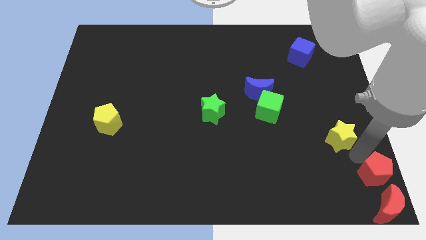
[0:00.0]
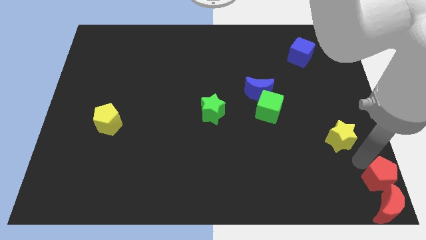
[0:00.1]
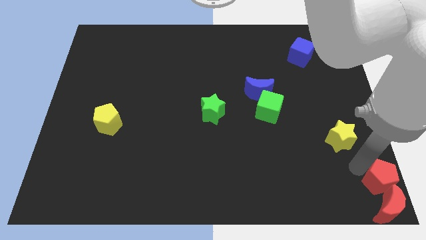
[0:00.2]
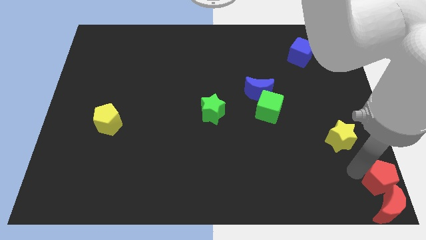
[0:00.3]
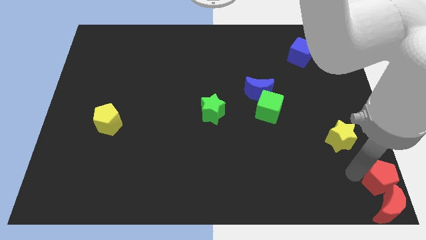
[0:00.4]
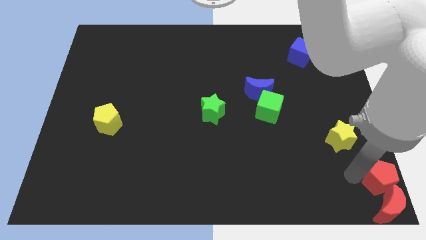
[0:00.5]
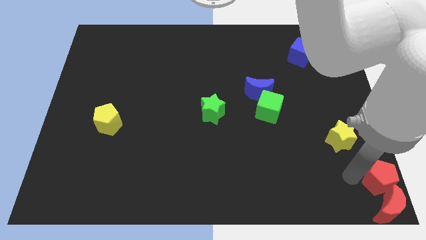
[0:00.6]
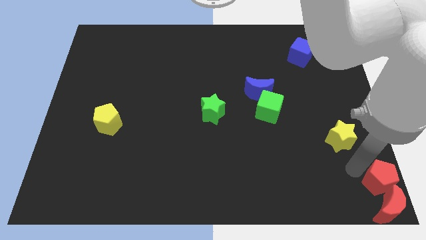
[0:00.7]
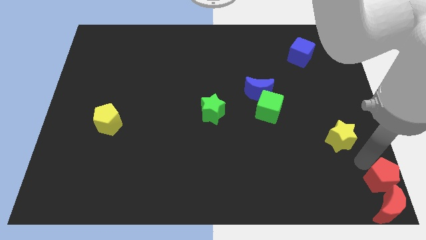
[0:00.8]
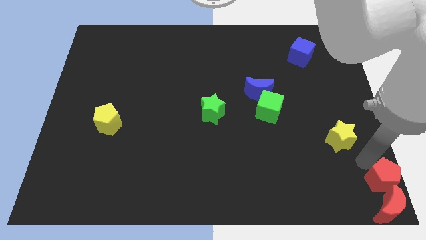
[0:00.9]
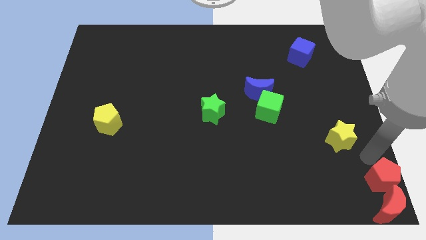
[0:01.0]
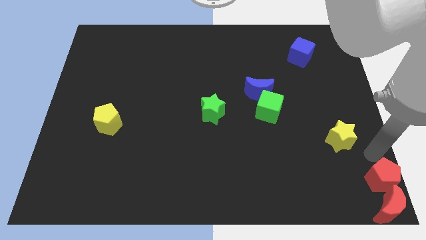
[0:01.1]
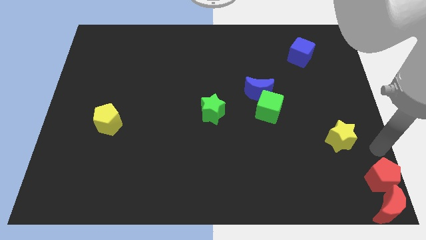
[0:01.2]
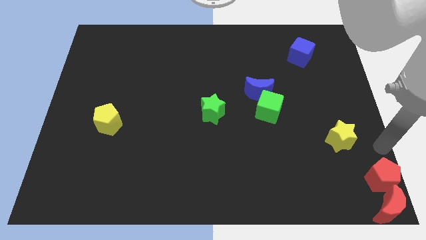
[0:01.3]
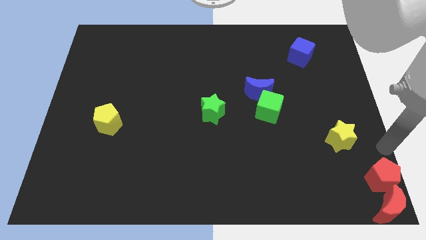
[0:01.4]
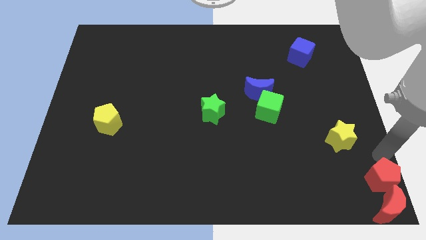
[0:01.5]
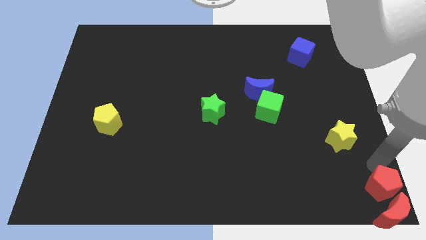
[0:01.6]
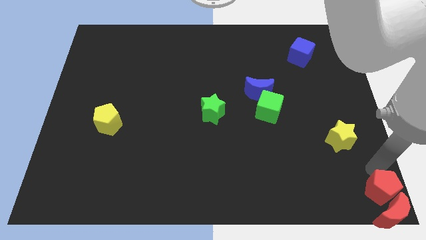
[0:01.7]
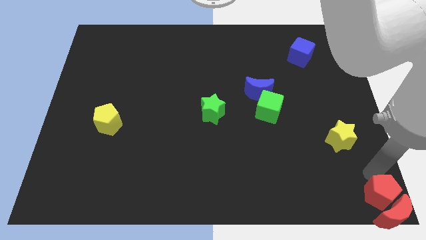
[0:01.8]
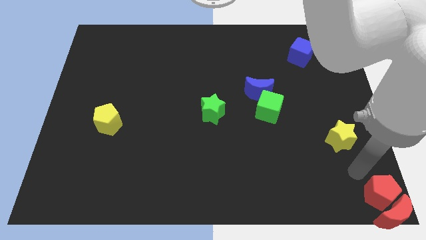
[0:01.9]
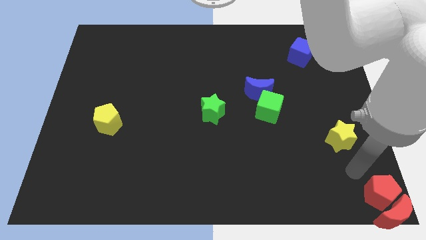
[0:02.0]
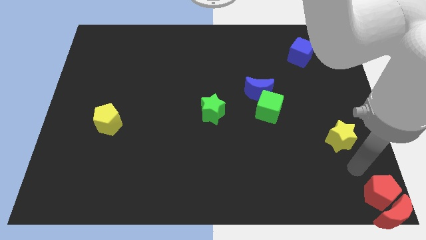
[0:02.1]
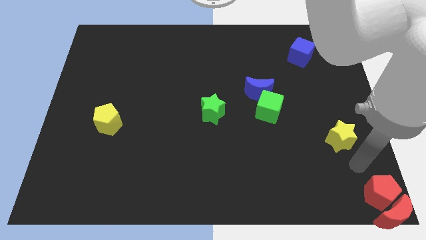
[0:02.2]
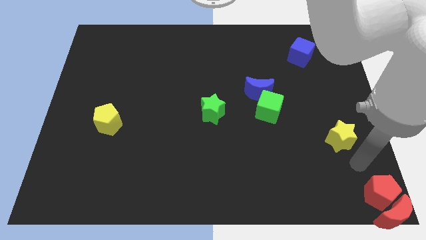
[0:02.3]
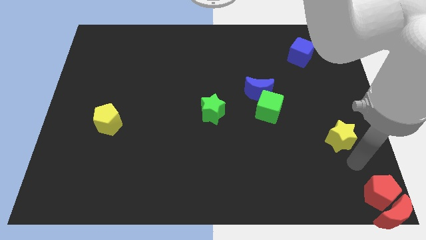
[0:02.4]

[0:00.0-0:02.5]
move the red blocks to the bottom right corner of the board

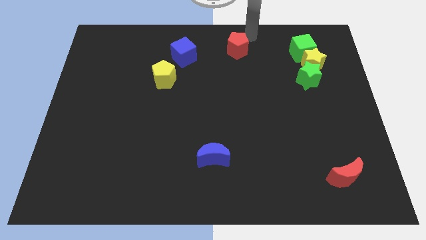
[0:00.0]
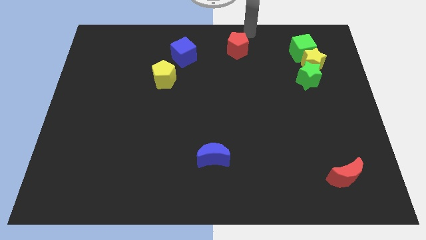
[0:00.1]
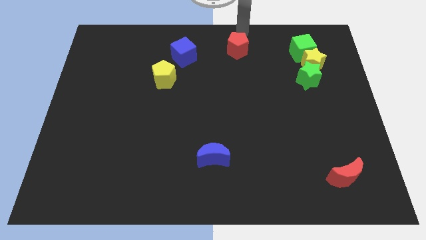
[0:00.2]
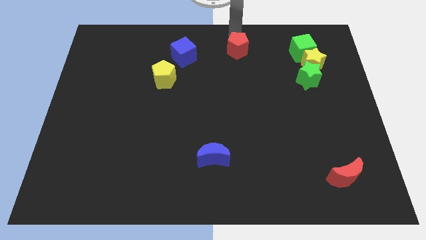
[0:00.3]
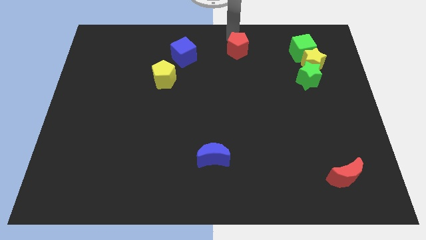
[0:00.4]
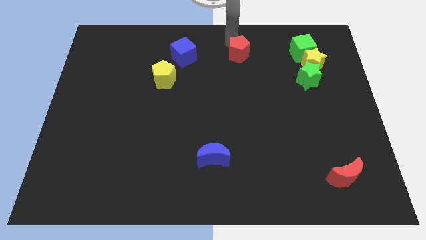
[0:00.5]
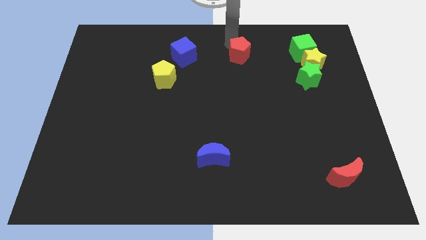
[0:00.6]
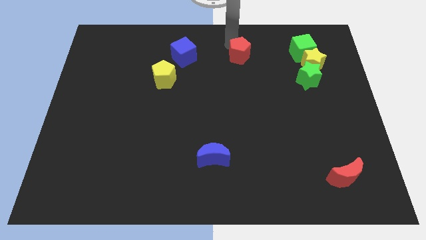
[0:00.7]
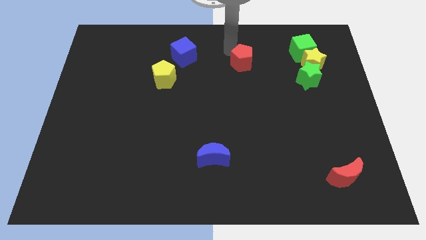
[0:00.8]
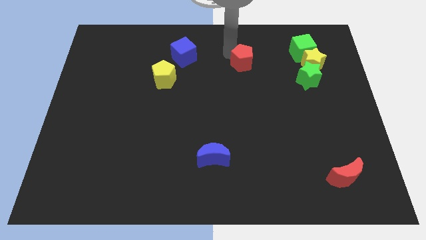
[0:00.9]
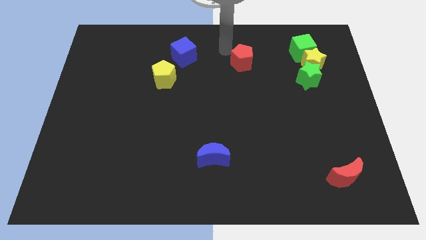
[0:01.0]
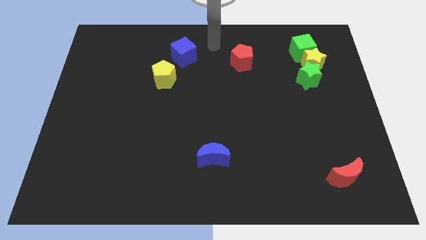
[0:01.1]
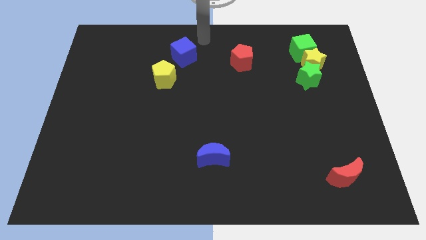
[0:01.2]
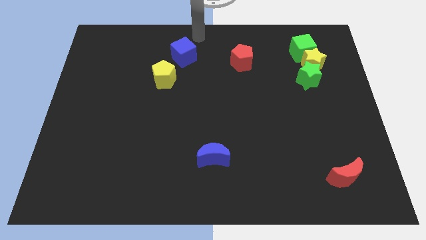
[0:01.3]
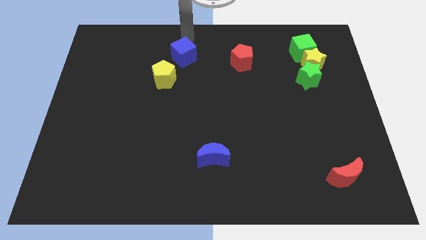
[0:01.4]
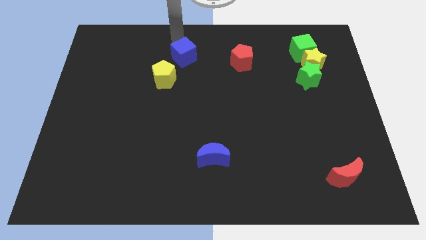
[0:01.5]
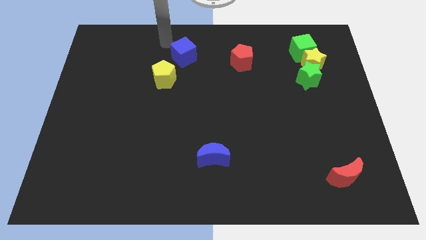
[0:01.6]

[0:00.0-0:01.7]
move the red pentagon towards down

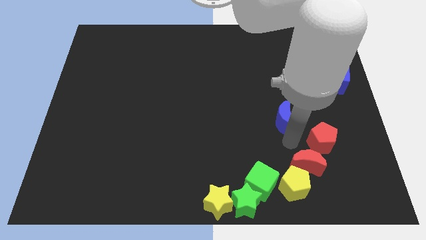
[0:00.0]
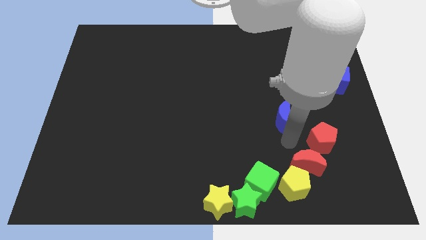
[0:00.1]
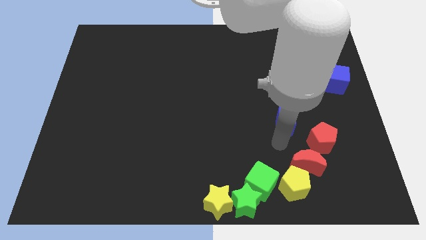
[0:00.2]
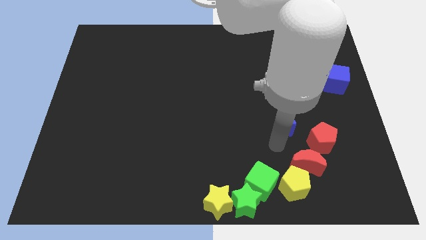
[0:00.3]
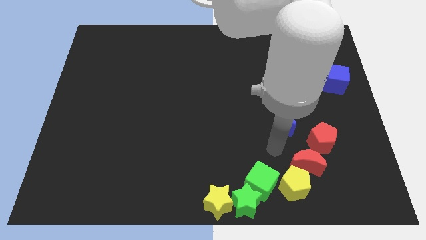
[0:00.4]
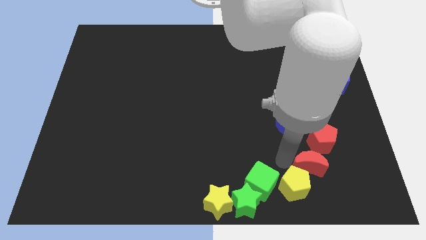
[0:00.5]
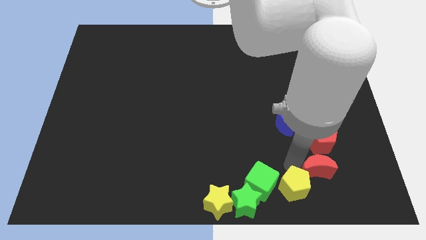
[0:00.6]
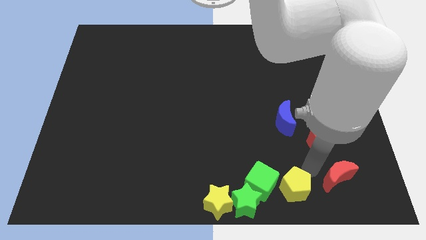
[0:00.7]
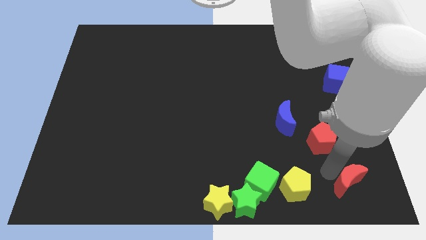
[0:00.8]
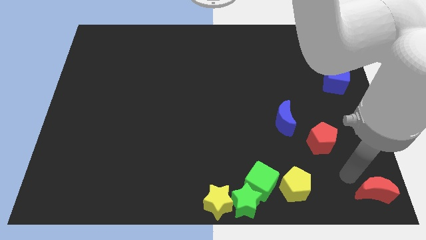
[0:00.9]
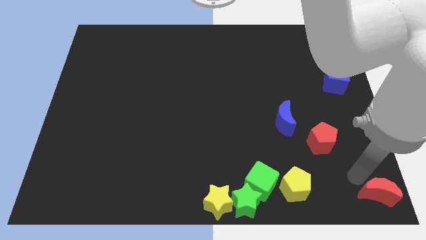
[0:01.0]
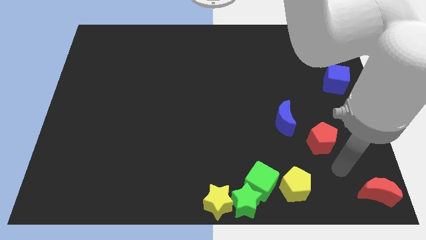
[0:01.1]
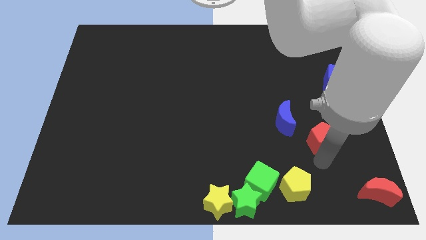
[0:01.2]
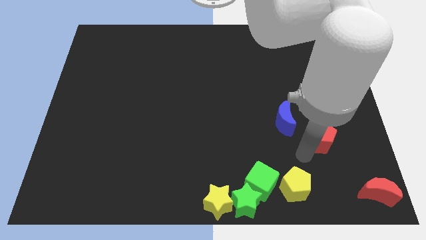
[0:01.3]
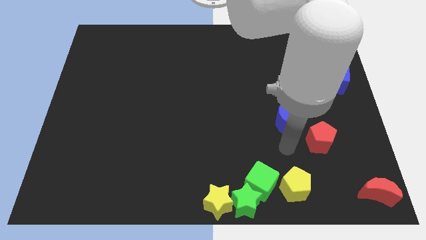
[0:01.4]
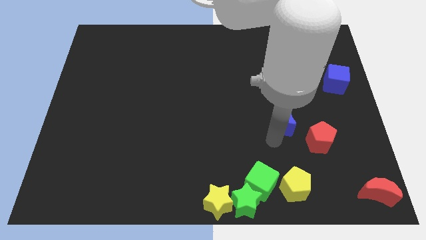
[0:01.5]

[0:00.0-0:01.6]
move the red moon towards the bottom right

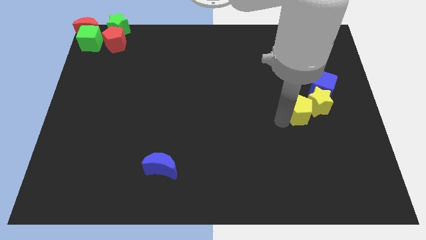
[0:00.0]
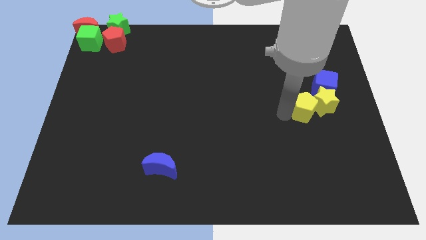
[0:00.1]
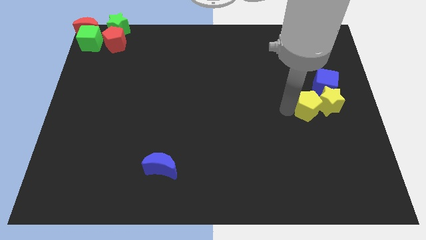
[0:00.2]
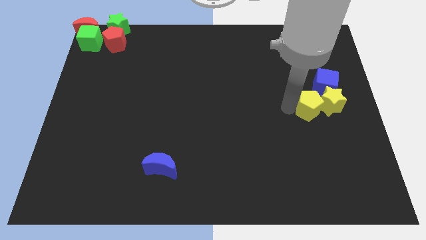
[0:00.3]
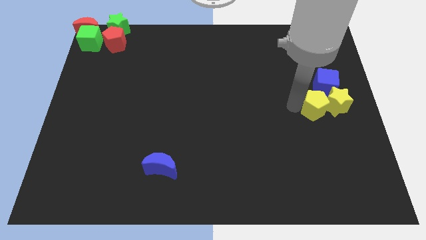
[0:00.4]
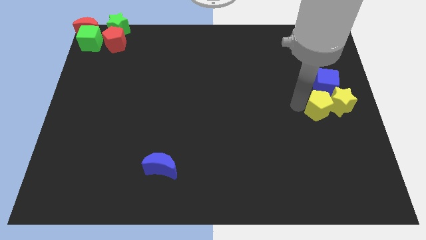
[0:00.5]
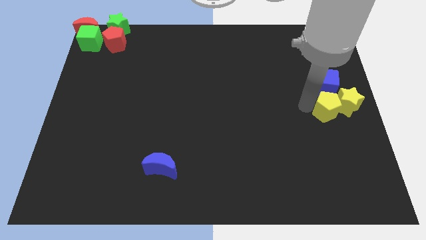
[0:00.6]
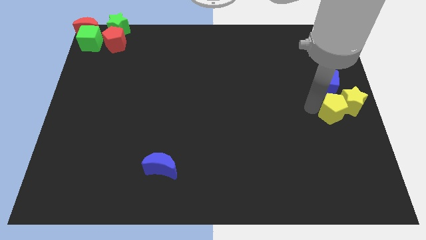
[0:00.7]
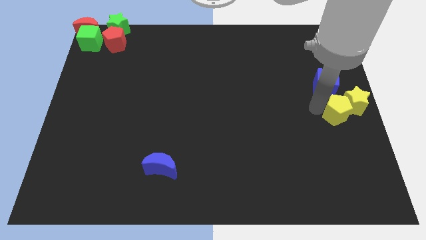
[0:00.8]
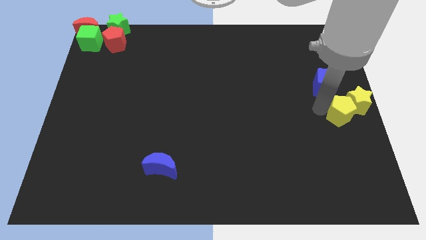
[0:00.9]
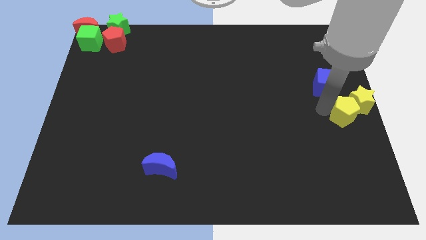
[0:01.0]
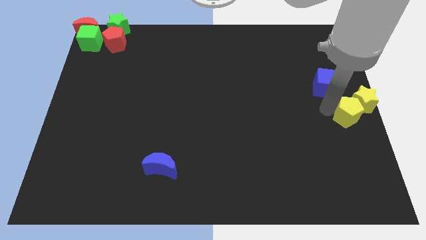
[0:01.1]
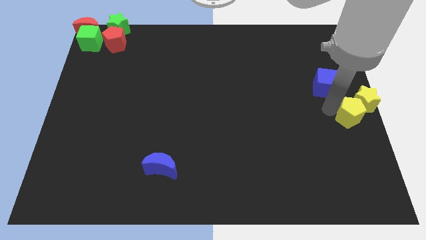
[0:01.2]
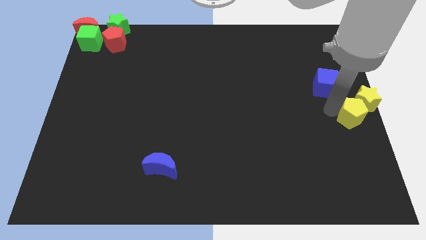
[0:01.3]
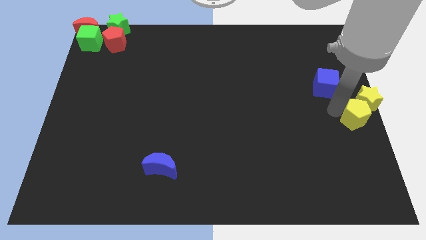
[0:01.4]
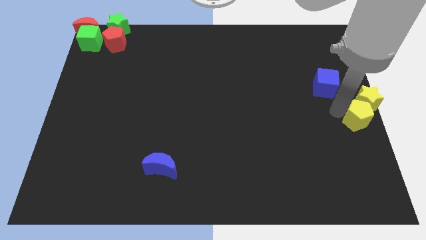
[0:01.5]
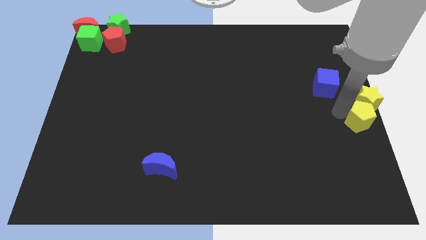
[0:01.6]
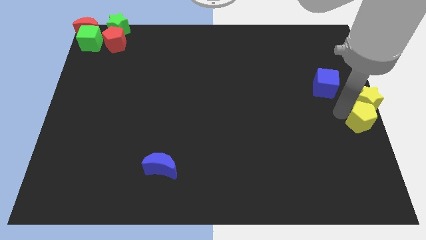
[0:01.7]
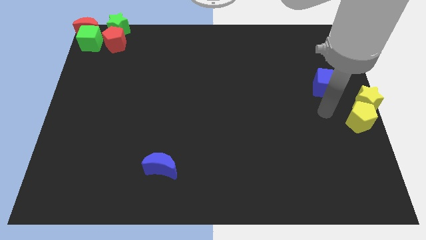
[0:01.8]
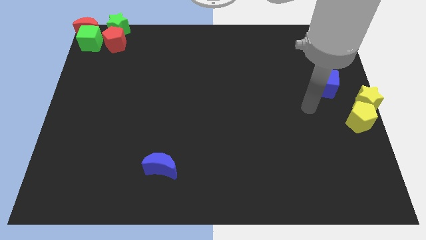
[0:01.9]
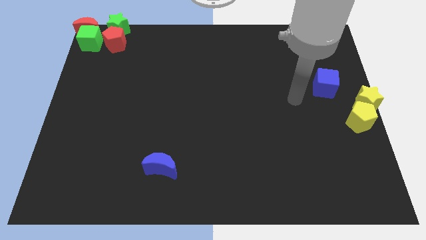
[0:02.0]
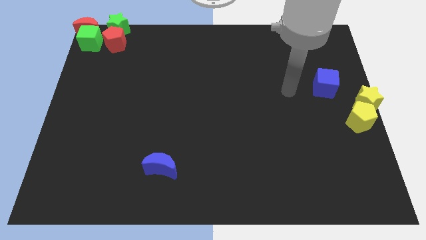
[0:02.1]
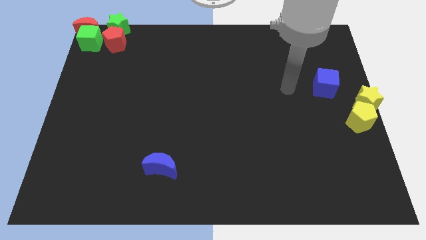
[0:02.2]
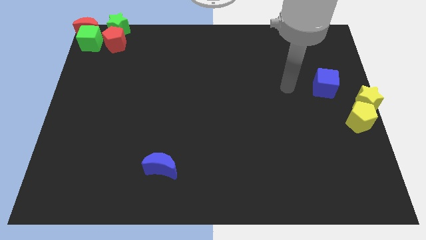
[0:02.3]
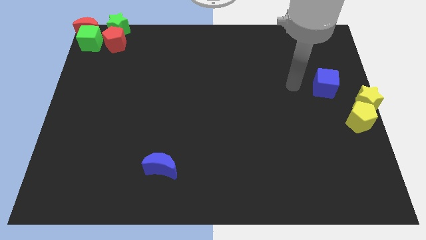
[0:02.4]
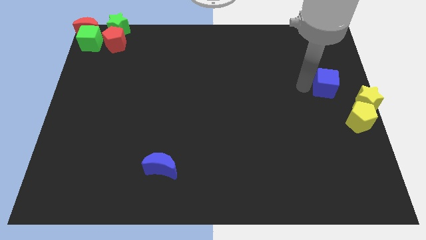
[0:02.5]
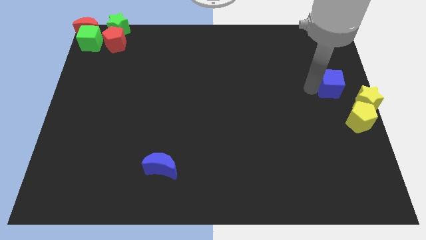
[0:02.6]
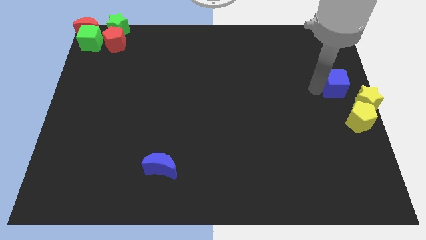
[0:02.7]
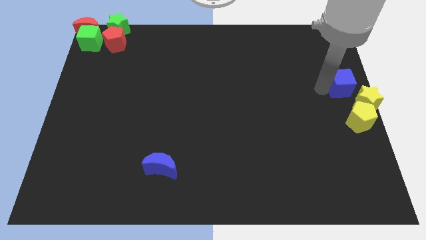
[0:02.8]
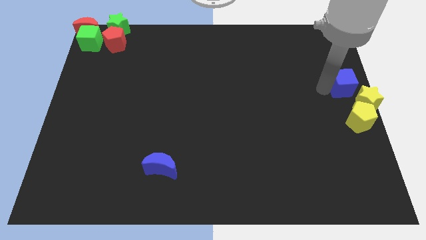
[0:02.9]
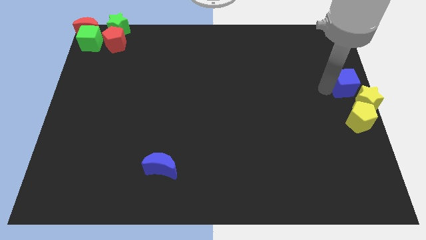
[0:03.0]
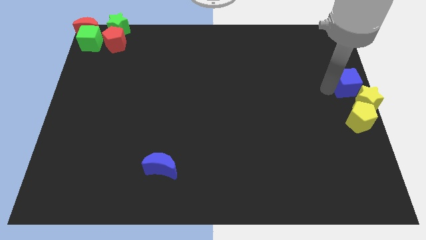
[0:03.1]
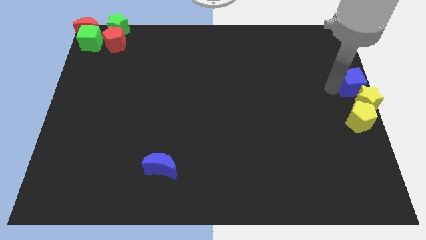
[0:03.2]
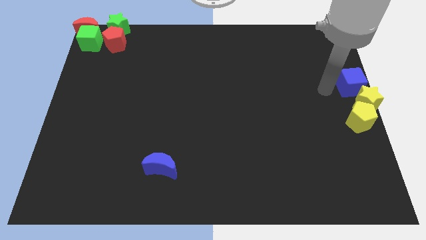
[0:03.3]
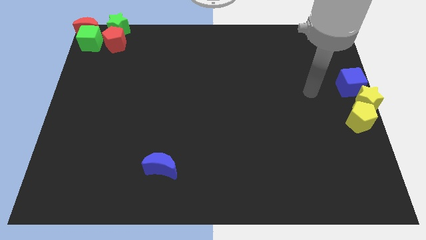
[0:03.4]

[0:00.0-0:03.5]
place both the yellow blocks and blue cube at the center right of the board
